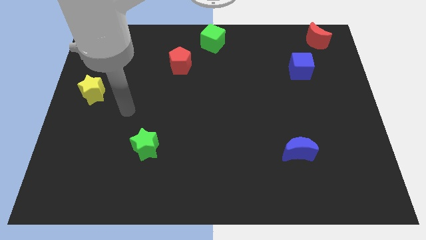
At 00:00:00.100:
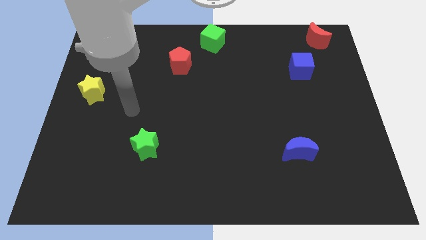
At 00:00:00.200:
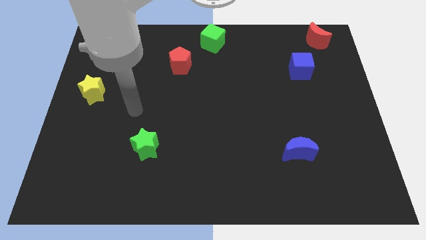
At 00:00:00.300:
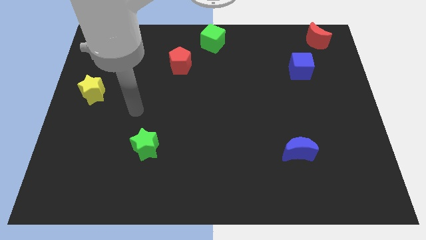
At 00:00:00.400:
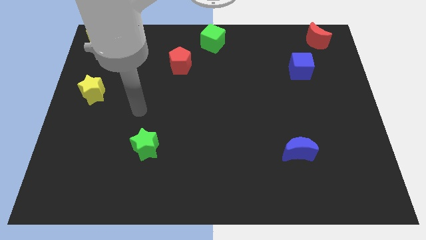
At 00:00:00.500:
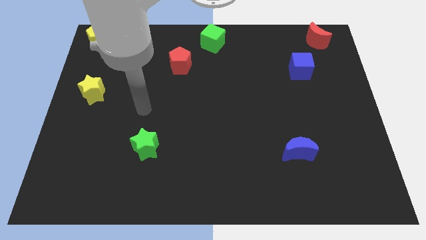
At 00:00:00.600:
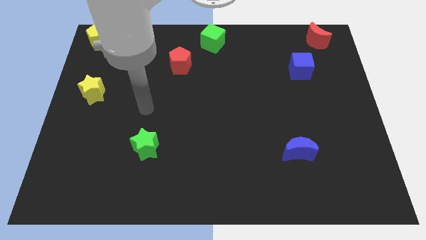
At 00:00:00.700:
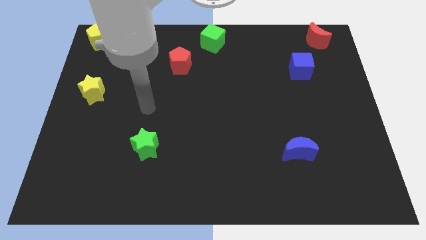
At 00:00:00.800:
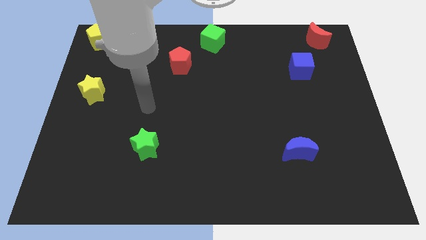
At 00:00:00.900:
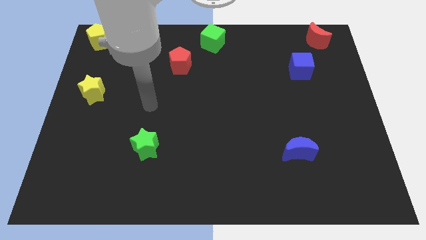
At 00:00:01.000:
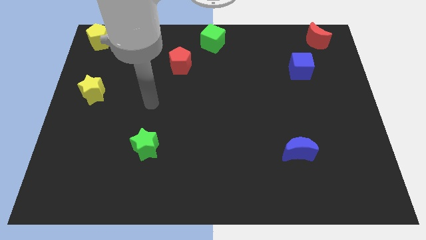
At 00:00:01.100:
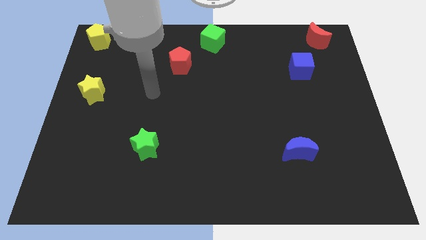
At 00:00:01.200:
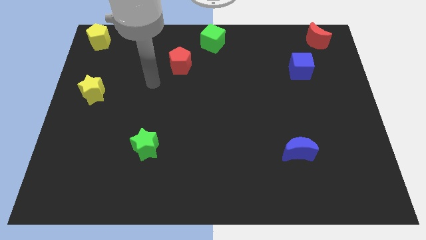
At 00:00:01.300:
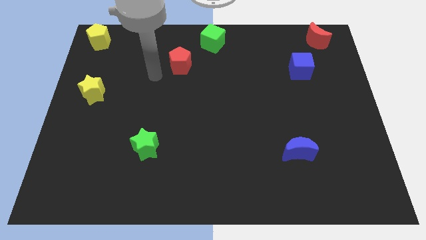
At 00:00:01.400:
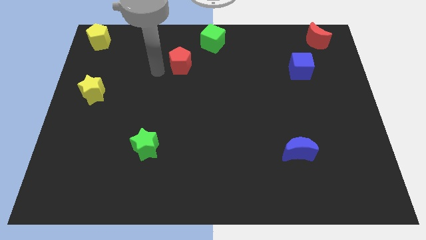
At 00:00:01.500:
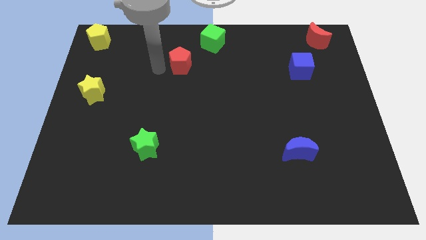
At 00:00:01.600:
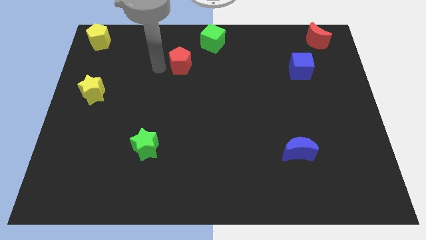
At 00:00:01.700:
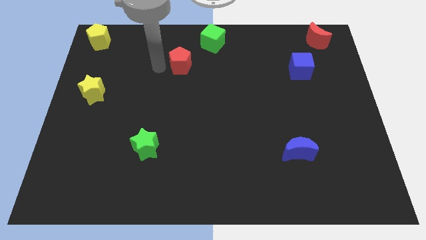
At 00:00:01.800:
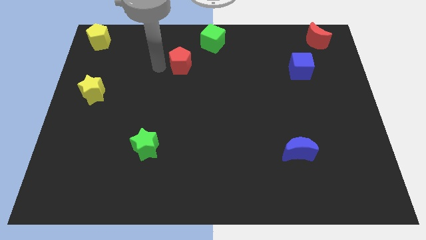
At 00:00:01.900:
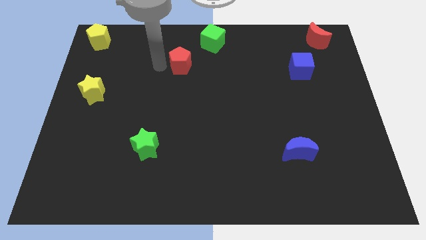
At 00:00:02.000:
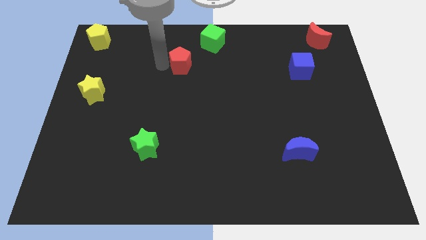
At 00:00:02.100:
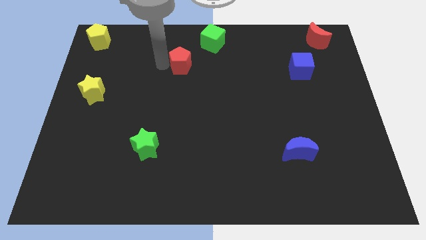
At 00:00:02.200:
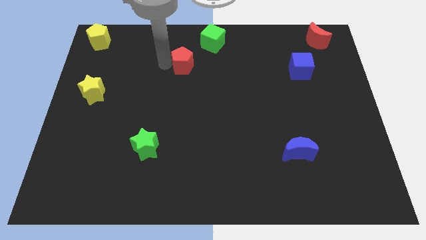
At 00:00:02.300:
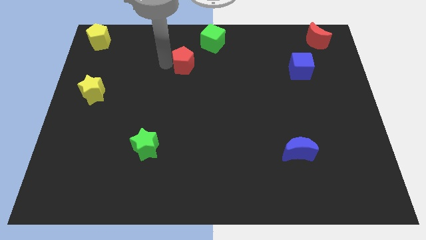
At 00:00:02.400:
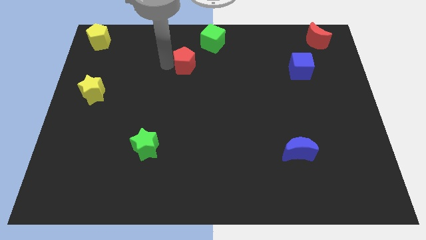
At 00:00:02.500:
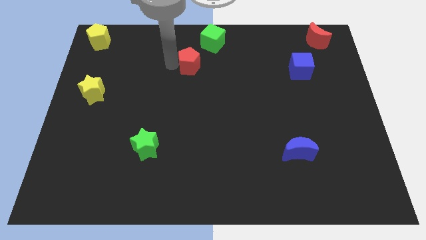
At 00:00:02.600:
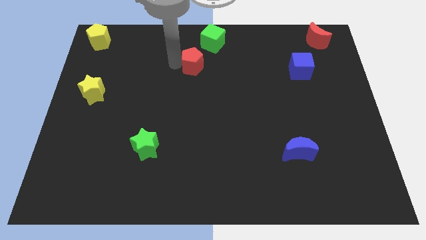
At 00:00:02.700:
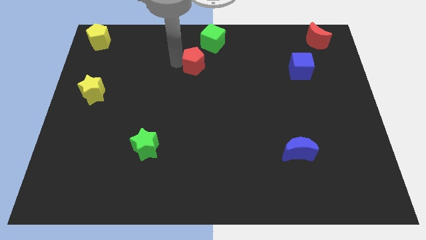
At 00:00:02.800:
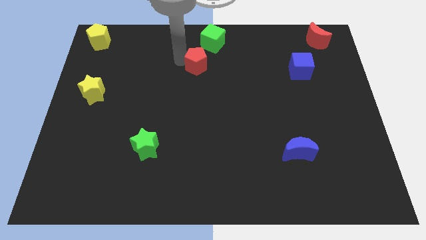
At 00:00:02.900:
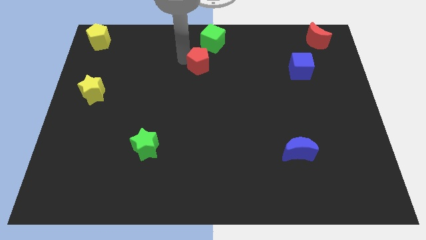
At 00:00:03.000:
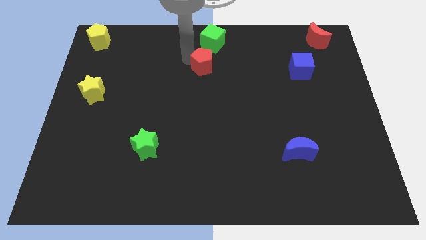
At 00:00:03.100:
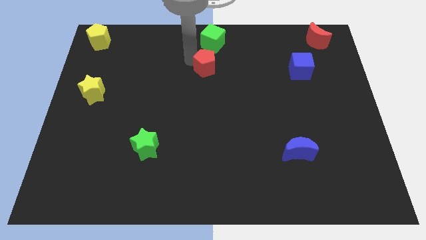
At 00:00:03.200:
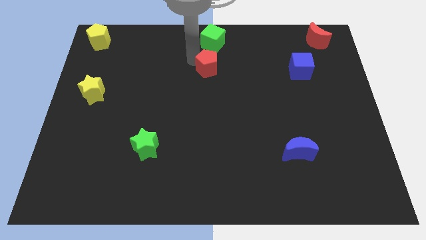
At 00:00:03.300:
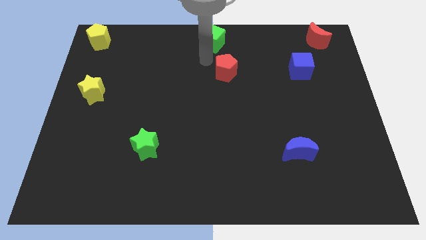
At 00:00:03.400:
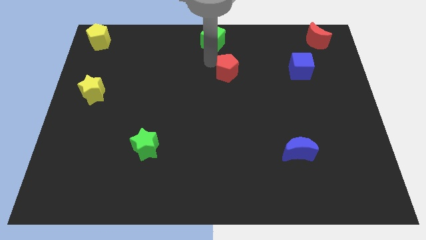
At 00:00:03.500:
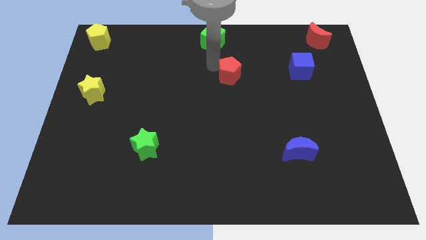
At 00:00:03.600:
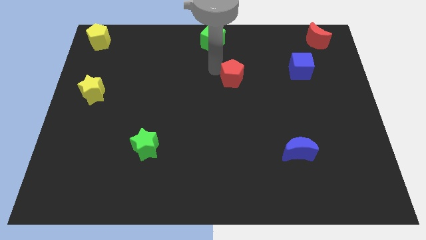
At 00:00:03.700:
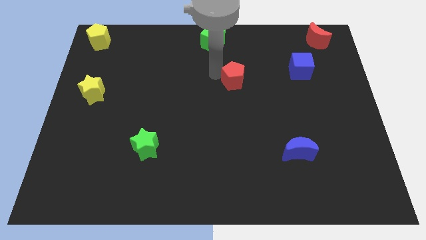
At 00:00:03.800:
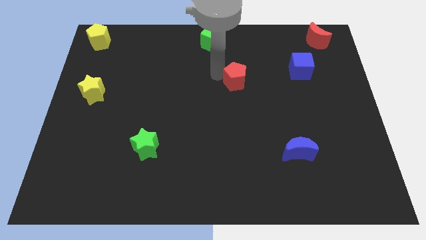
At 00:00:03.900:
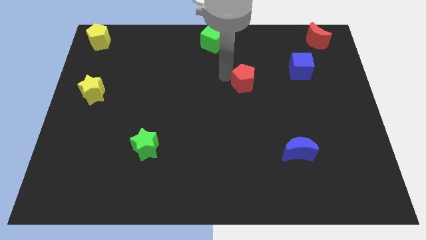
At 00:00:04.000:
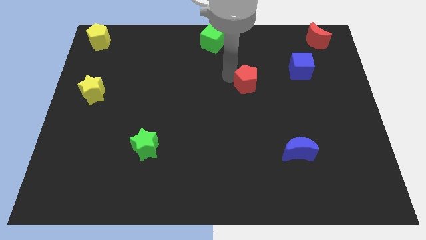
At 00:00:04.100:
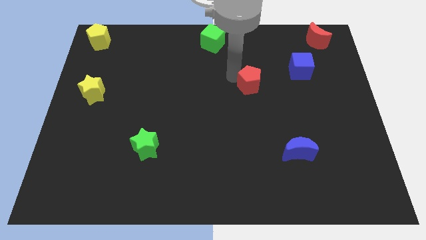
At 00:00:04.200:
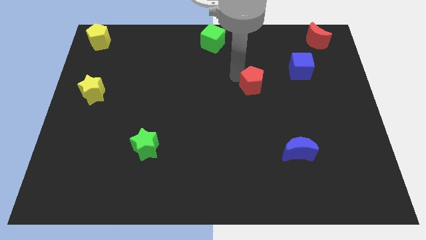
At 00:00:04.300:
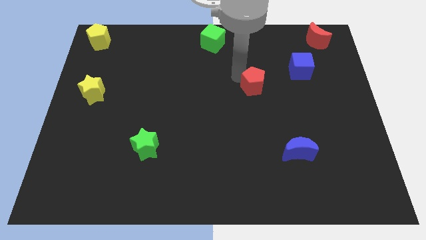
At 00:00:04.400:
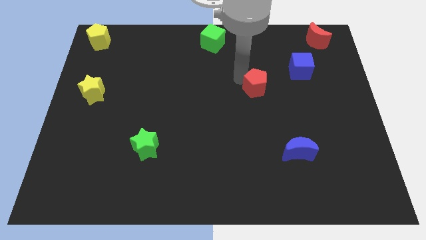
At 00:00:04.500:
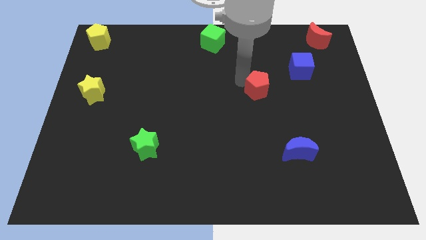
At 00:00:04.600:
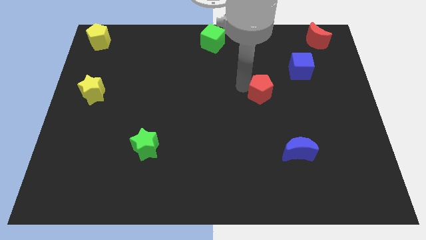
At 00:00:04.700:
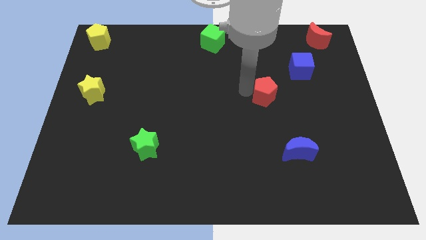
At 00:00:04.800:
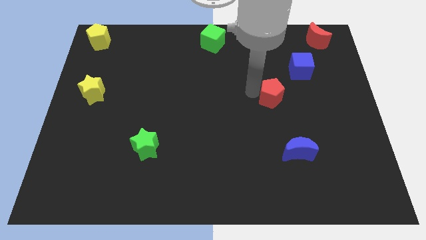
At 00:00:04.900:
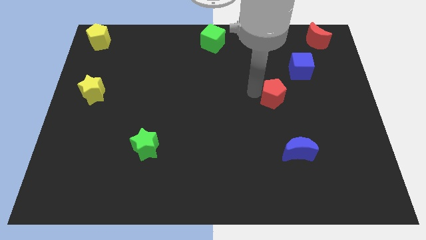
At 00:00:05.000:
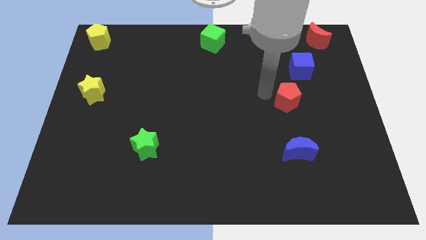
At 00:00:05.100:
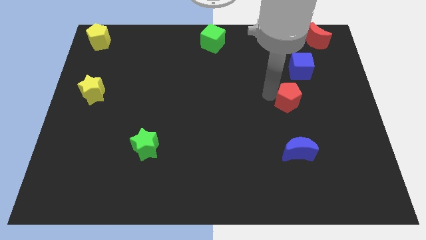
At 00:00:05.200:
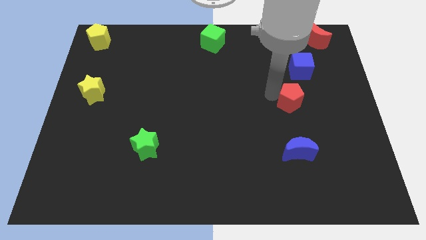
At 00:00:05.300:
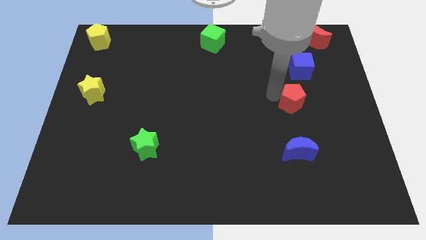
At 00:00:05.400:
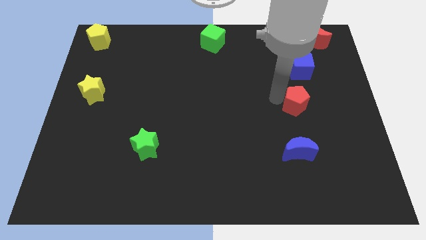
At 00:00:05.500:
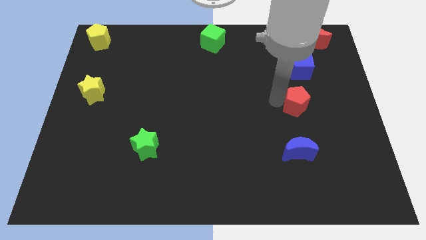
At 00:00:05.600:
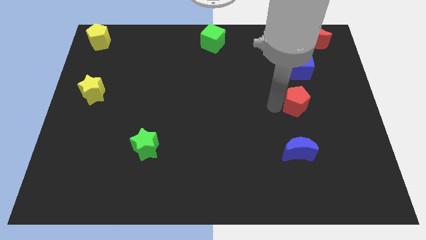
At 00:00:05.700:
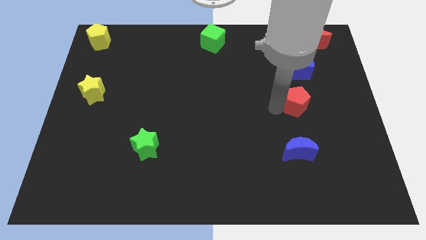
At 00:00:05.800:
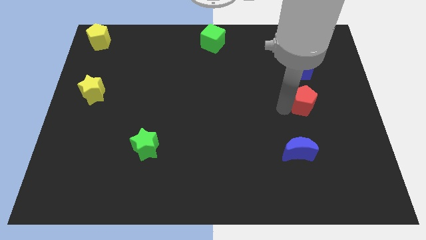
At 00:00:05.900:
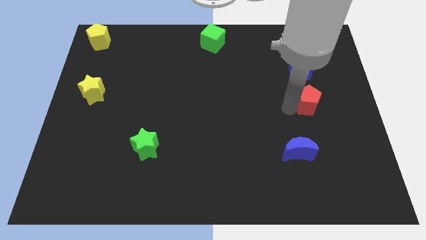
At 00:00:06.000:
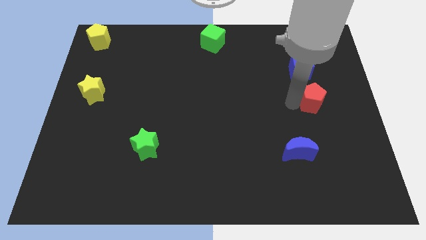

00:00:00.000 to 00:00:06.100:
place the red pentagon below the blue cube

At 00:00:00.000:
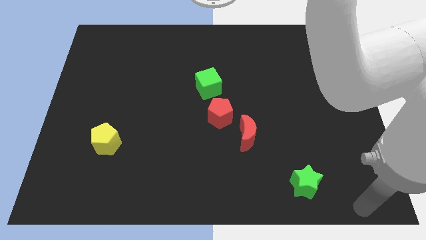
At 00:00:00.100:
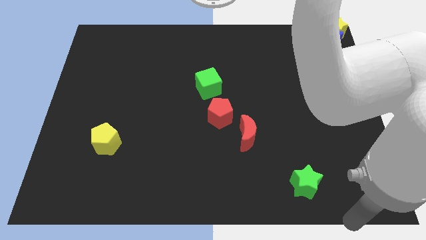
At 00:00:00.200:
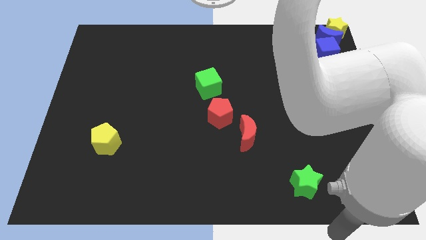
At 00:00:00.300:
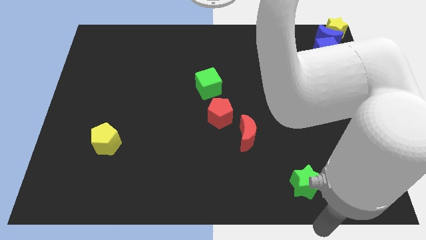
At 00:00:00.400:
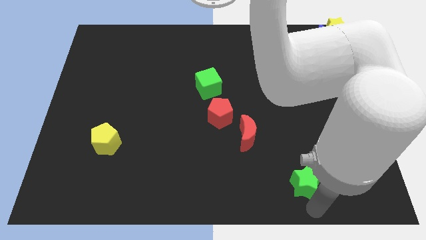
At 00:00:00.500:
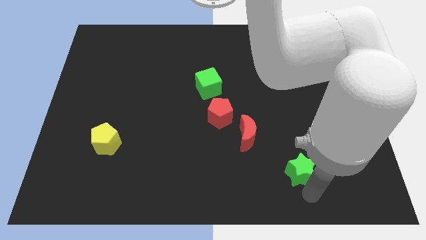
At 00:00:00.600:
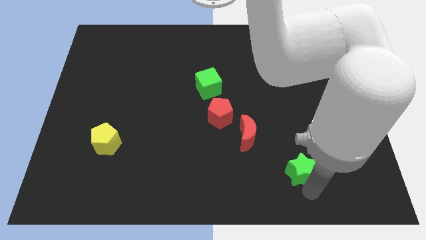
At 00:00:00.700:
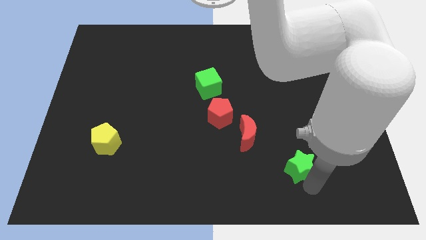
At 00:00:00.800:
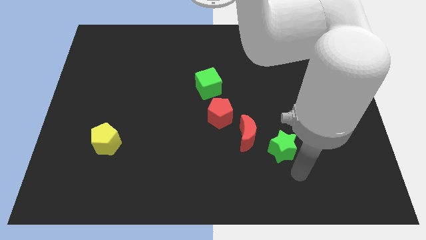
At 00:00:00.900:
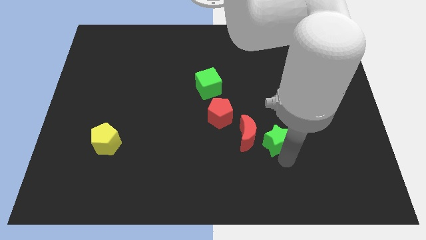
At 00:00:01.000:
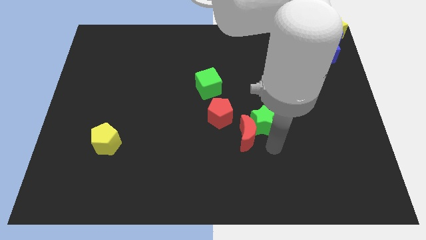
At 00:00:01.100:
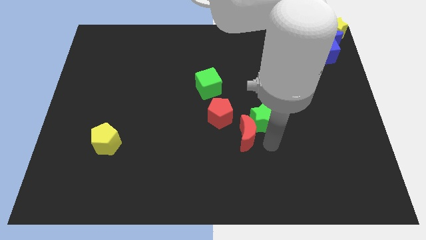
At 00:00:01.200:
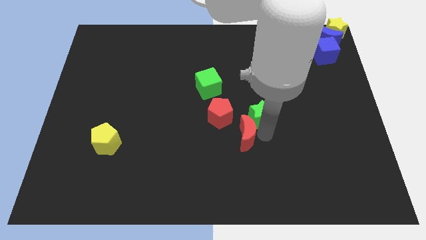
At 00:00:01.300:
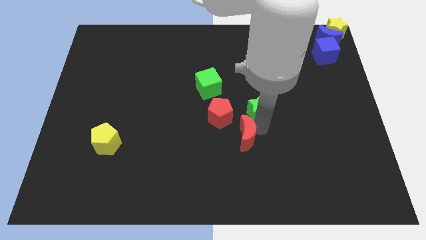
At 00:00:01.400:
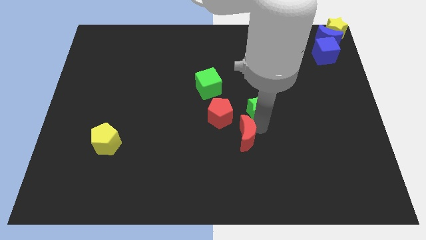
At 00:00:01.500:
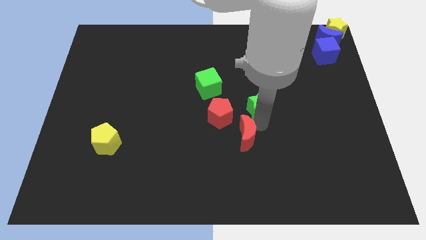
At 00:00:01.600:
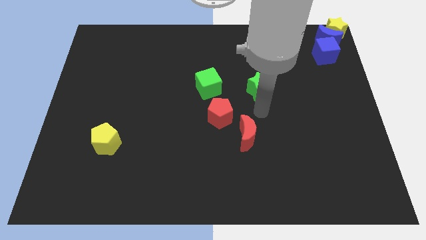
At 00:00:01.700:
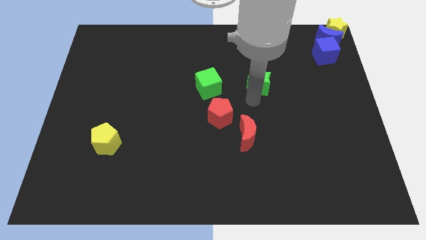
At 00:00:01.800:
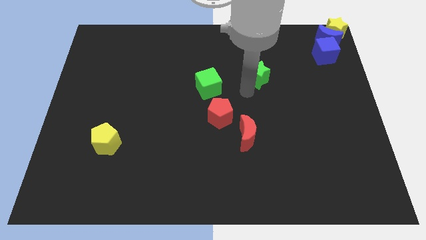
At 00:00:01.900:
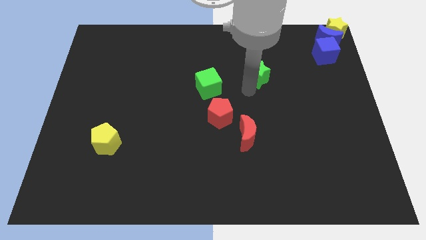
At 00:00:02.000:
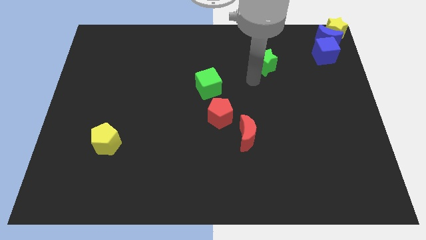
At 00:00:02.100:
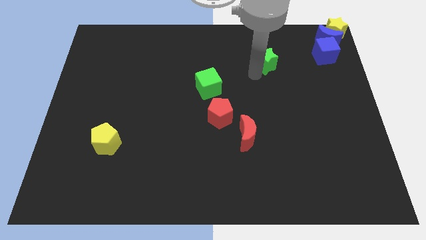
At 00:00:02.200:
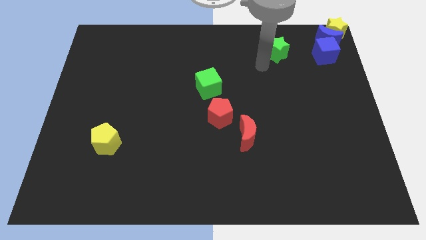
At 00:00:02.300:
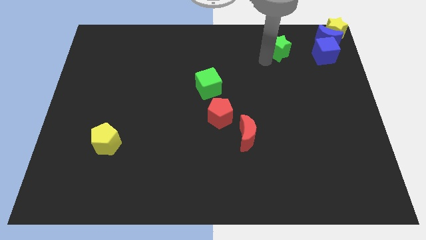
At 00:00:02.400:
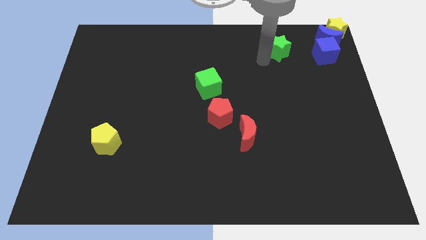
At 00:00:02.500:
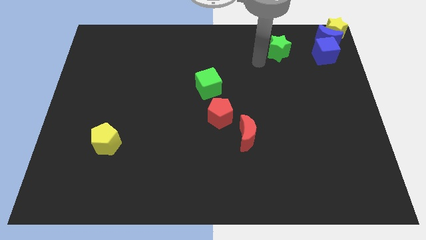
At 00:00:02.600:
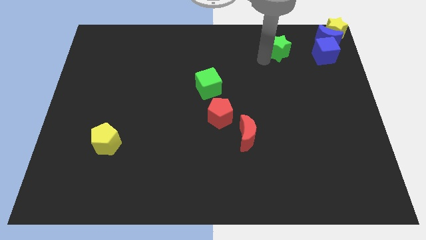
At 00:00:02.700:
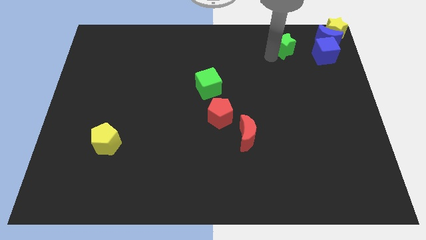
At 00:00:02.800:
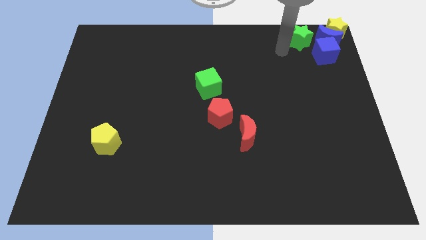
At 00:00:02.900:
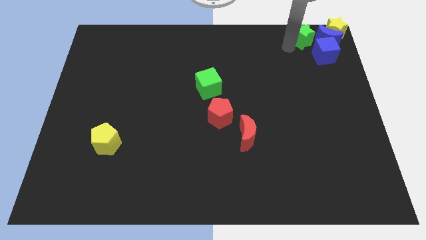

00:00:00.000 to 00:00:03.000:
move the green star to the left of blue crescent
